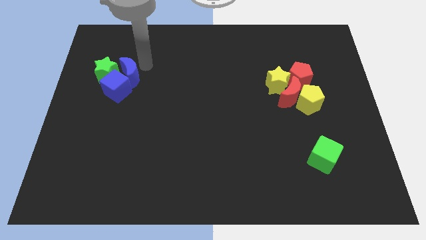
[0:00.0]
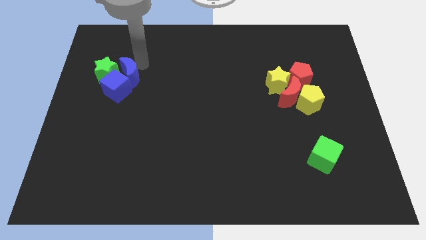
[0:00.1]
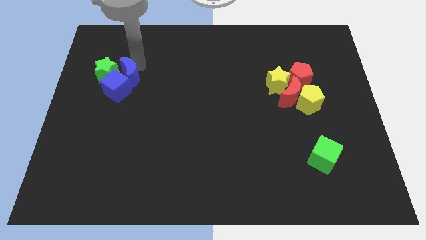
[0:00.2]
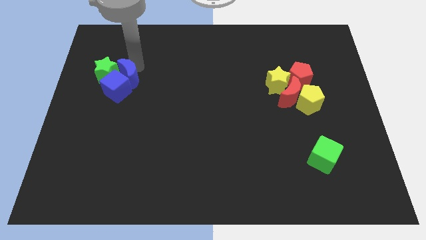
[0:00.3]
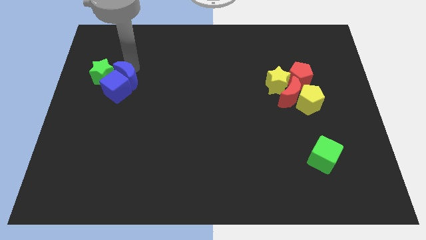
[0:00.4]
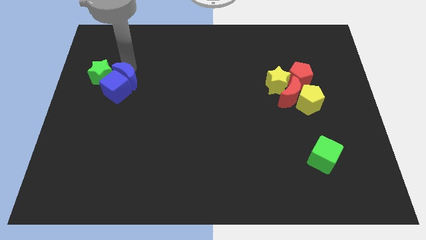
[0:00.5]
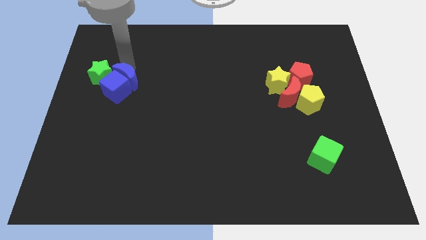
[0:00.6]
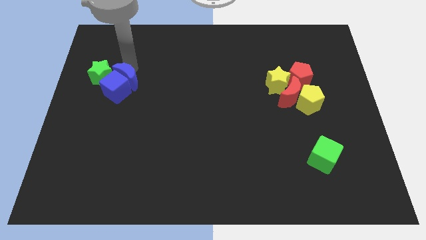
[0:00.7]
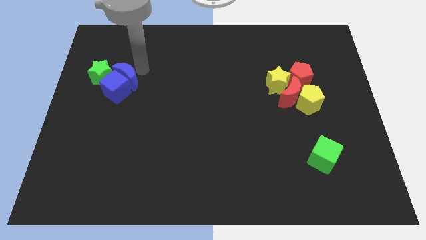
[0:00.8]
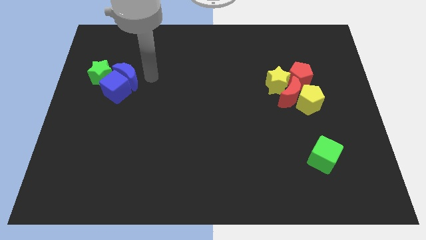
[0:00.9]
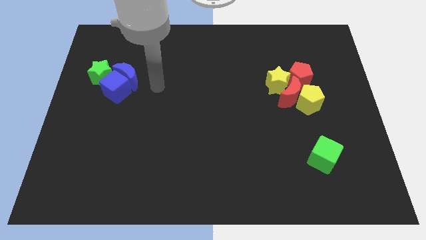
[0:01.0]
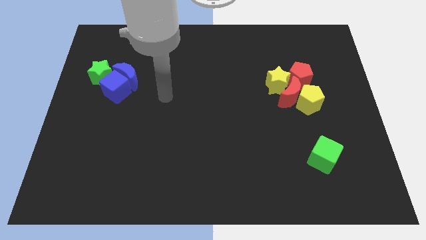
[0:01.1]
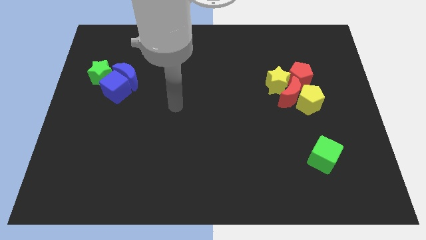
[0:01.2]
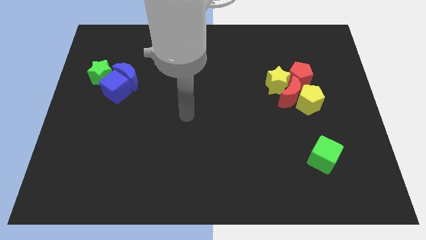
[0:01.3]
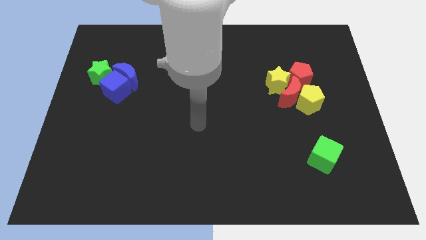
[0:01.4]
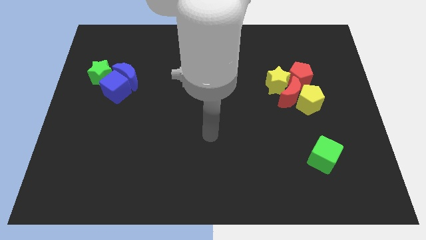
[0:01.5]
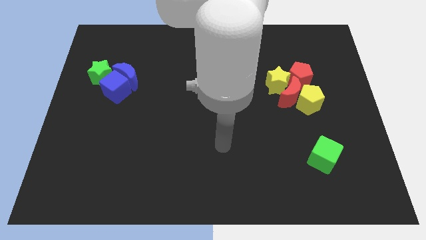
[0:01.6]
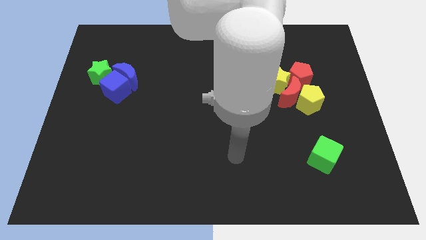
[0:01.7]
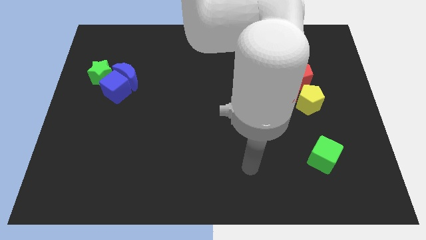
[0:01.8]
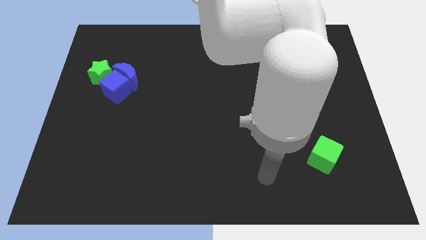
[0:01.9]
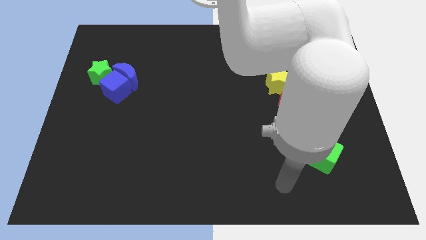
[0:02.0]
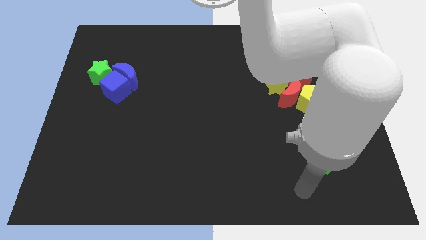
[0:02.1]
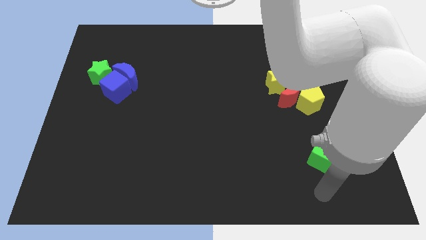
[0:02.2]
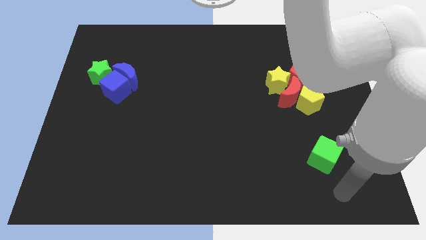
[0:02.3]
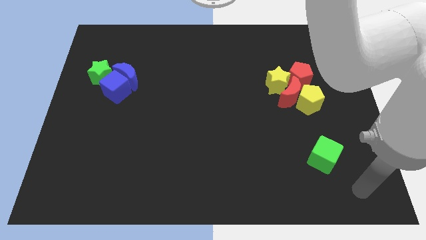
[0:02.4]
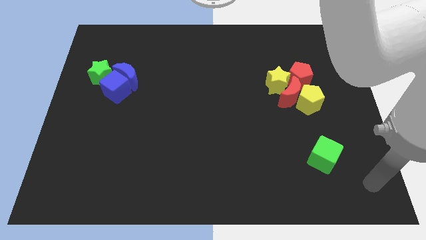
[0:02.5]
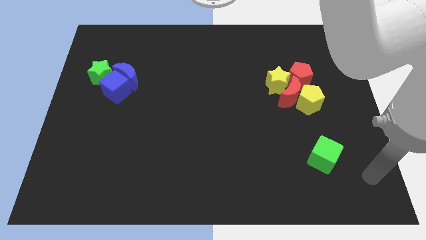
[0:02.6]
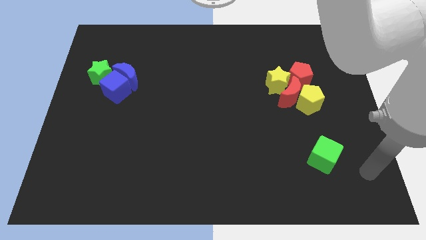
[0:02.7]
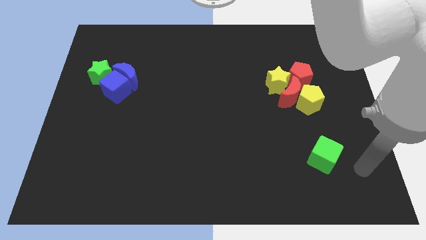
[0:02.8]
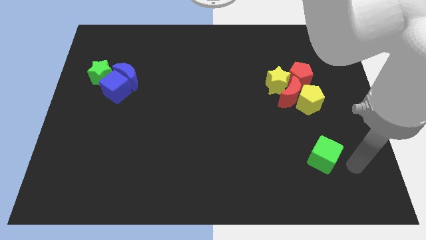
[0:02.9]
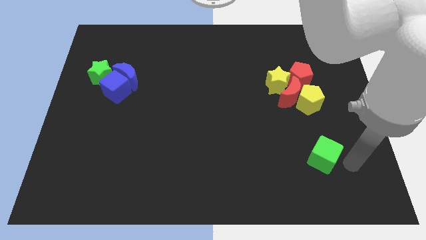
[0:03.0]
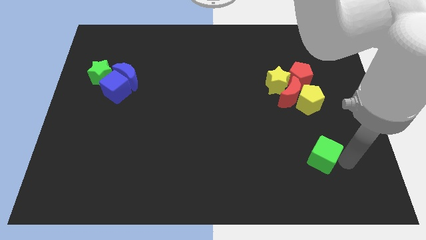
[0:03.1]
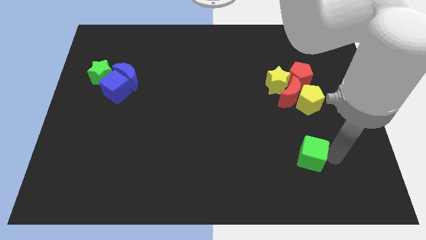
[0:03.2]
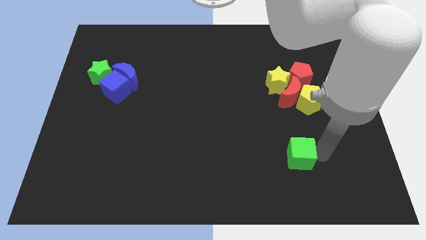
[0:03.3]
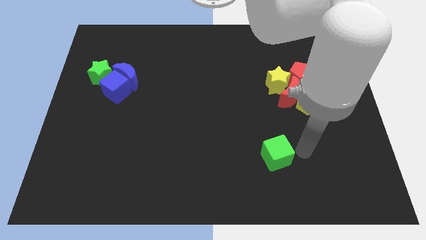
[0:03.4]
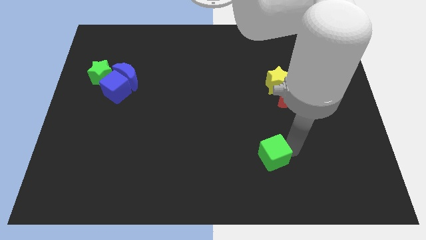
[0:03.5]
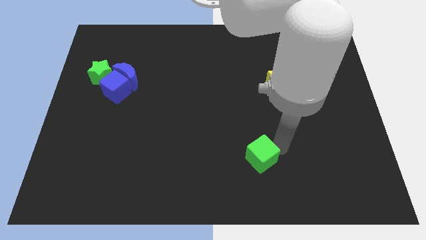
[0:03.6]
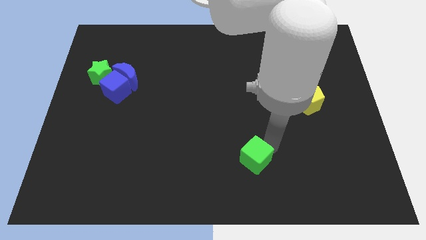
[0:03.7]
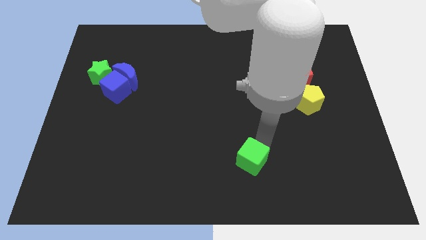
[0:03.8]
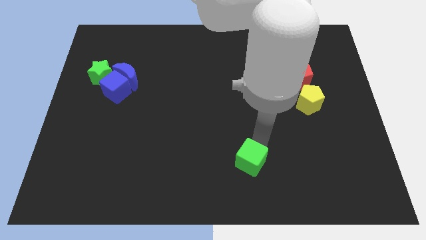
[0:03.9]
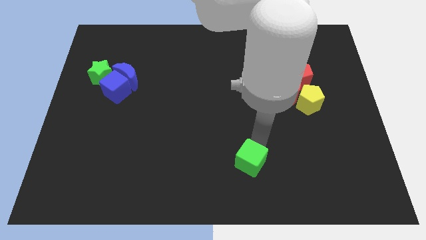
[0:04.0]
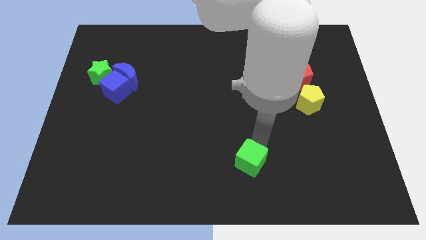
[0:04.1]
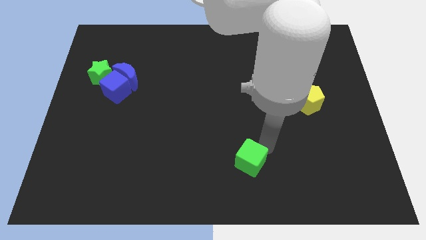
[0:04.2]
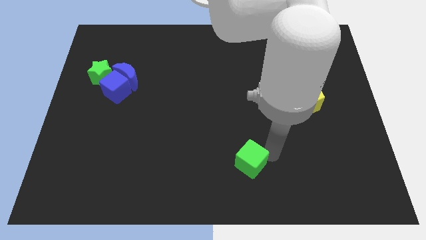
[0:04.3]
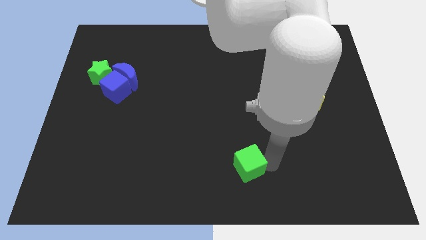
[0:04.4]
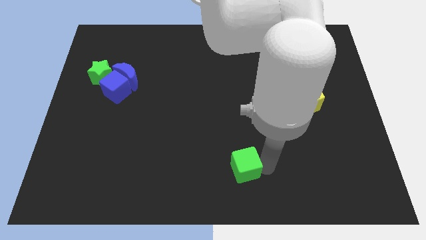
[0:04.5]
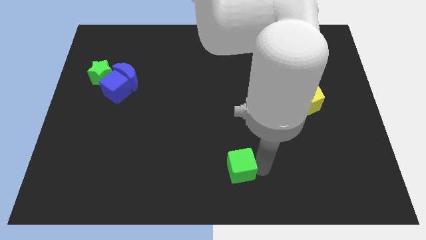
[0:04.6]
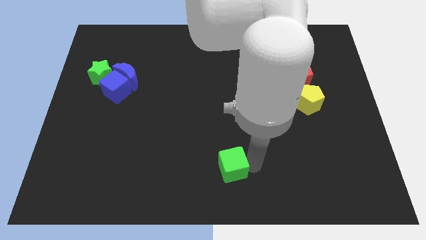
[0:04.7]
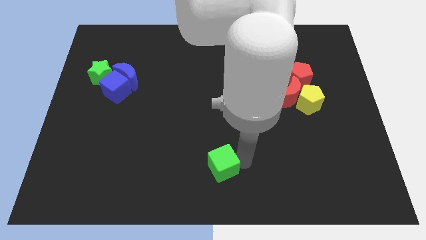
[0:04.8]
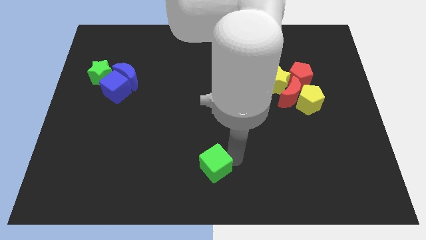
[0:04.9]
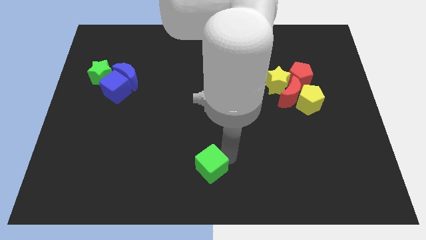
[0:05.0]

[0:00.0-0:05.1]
move the green cube diagonally to blue blocks

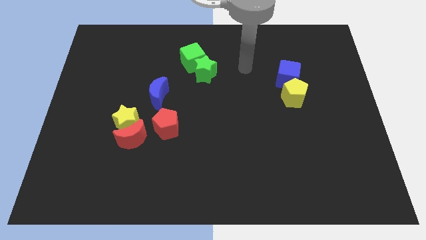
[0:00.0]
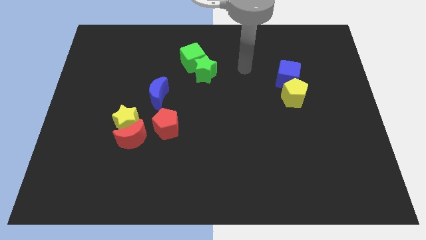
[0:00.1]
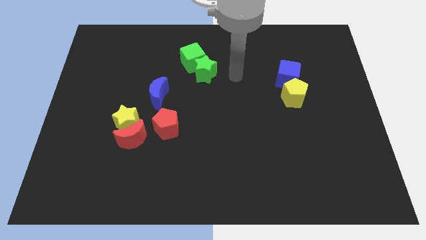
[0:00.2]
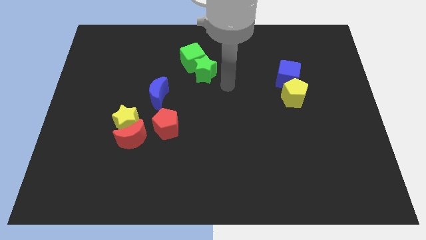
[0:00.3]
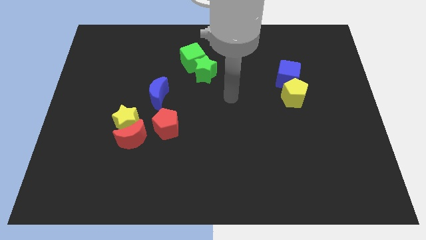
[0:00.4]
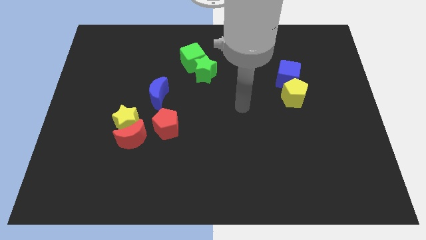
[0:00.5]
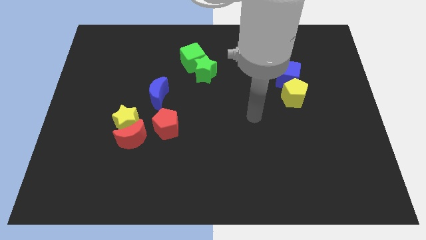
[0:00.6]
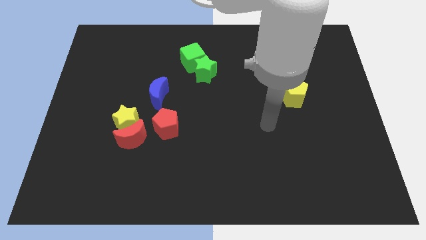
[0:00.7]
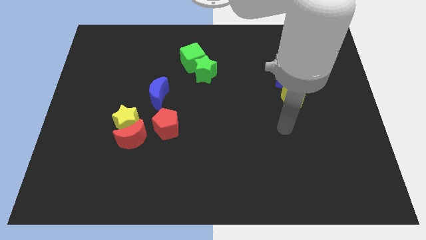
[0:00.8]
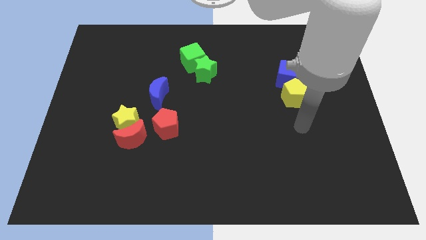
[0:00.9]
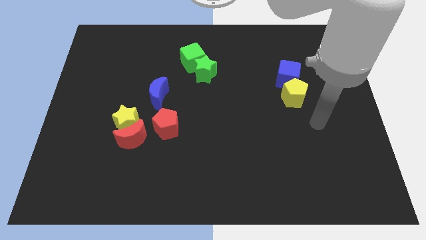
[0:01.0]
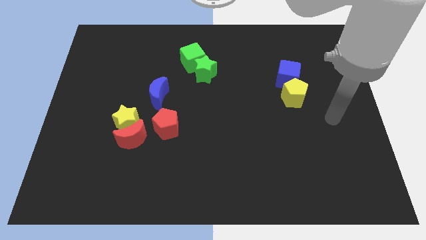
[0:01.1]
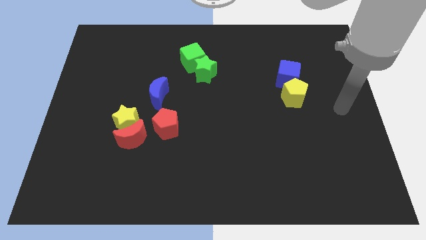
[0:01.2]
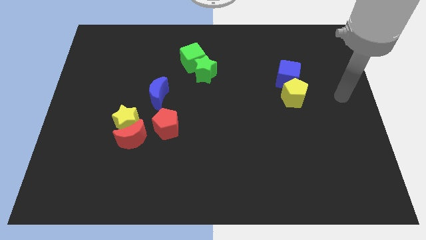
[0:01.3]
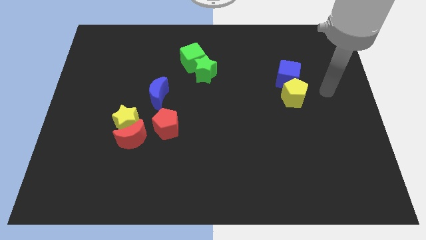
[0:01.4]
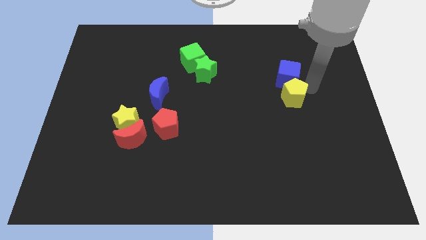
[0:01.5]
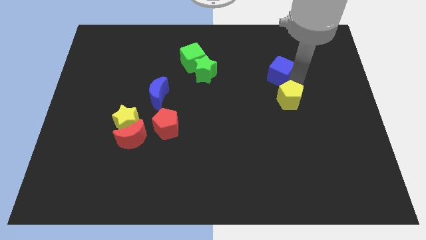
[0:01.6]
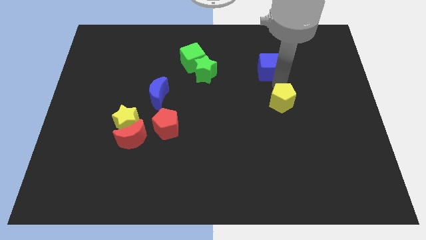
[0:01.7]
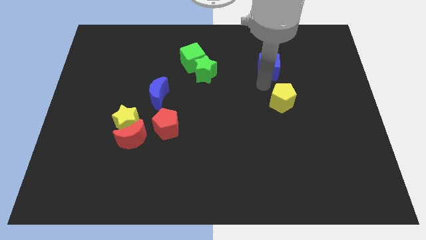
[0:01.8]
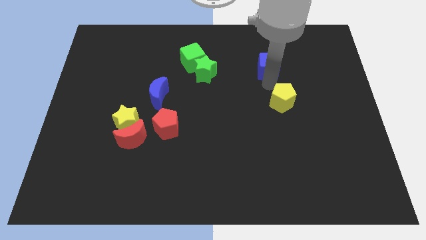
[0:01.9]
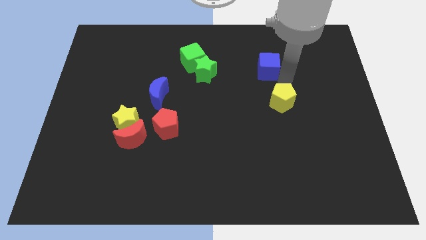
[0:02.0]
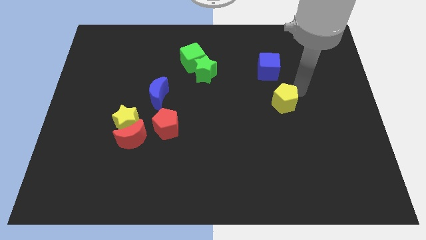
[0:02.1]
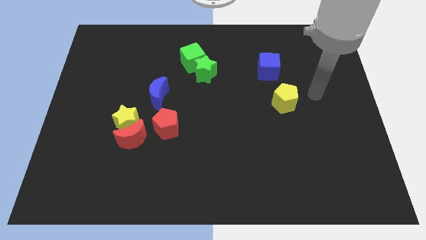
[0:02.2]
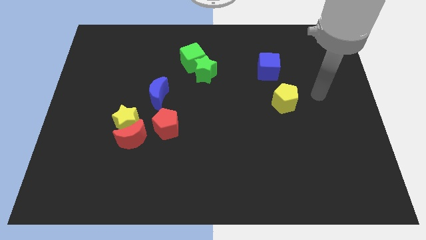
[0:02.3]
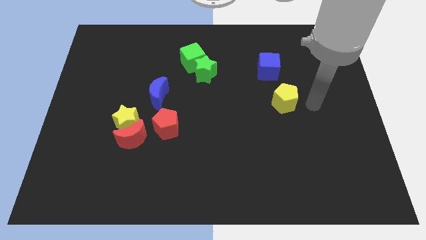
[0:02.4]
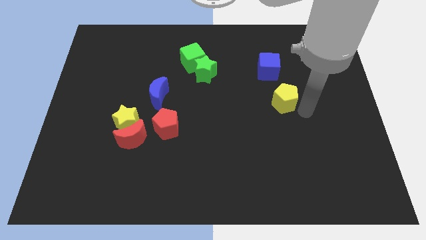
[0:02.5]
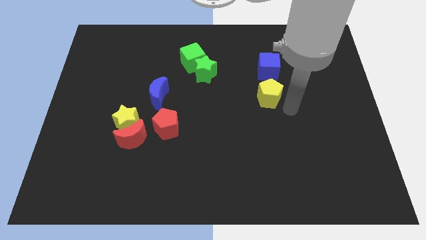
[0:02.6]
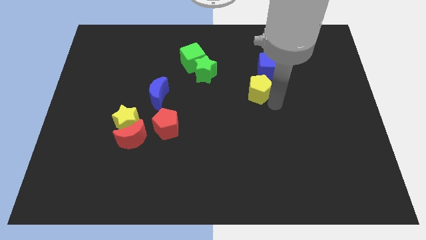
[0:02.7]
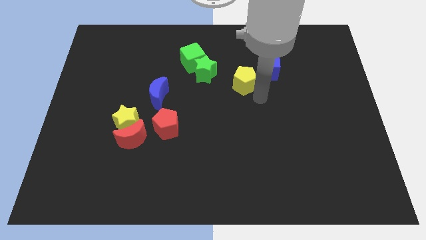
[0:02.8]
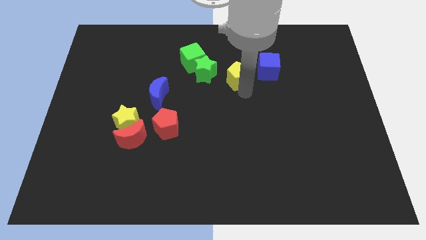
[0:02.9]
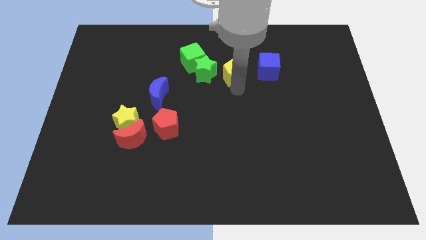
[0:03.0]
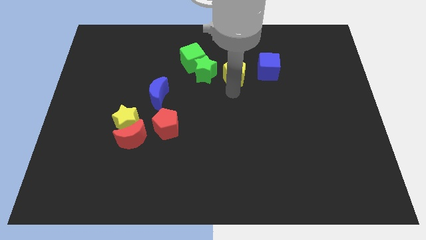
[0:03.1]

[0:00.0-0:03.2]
separate the blue cube and yellow pentagon to the top

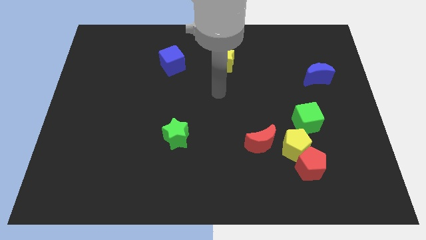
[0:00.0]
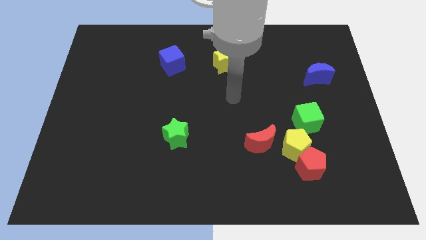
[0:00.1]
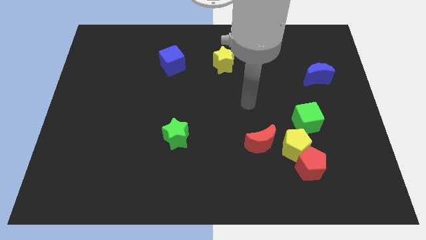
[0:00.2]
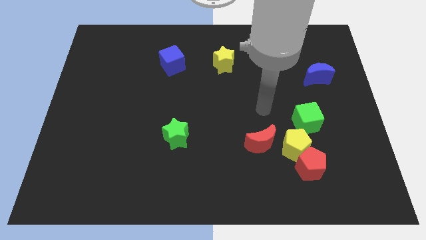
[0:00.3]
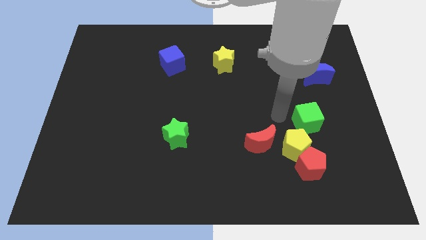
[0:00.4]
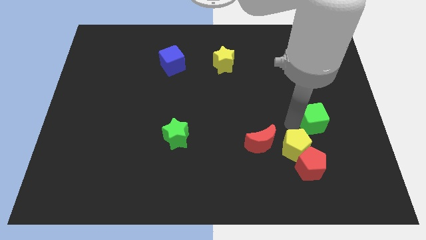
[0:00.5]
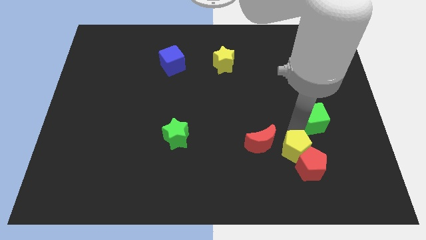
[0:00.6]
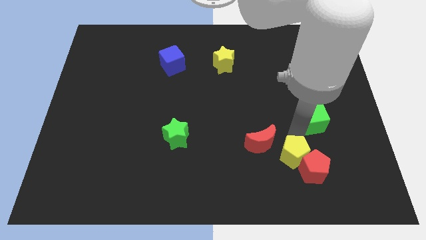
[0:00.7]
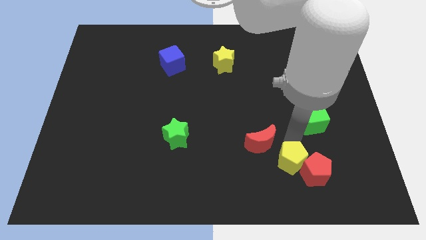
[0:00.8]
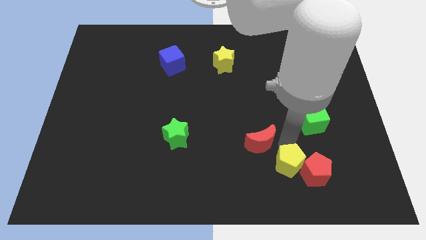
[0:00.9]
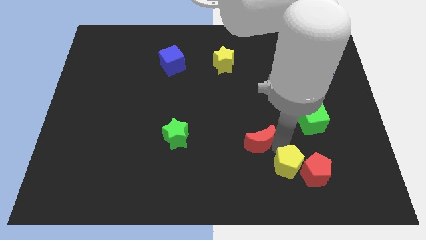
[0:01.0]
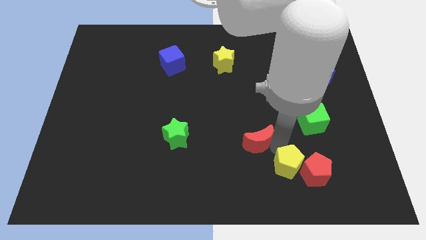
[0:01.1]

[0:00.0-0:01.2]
separate the yellow pentagon from the green cube
